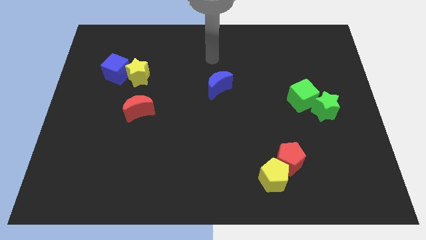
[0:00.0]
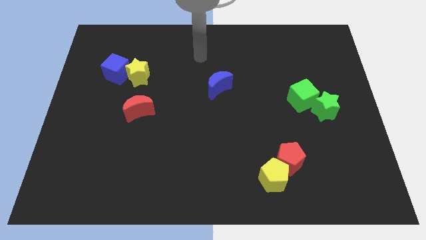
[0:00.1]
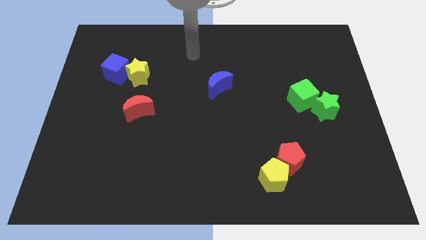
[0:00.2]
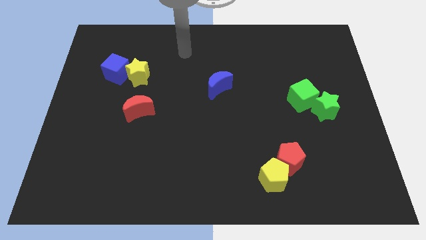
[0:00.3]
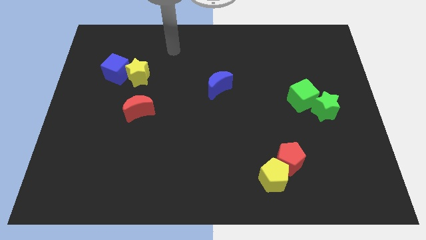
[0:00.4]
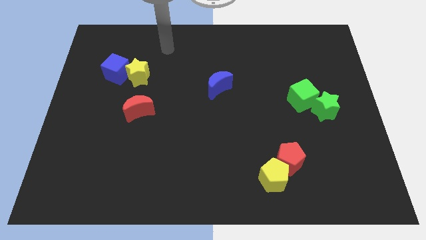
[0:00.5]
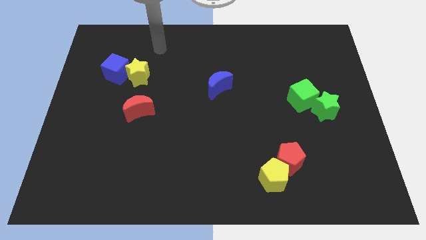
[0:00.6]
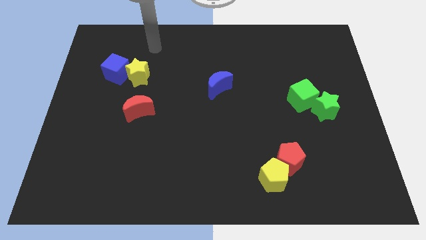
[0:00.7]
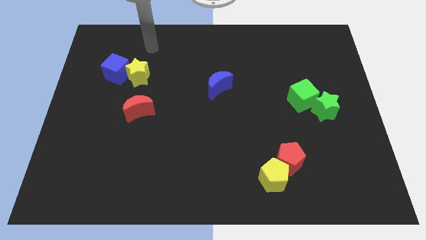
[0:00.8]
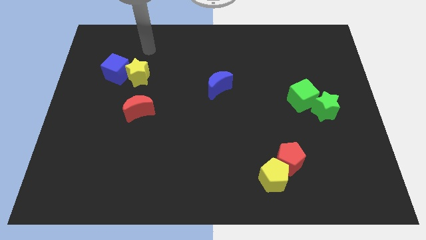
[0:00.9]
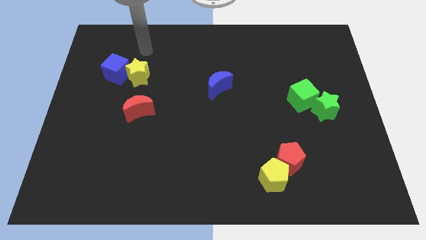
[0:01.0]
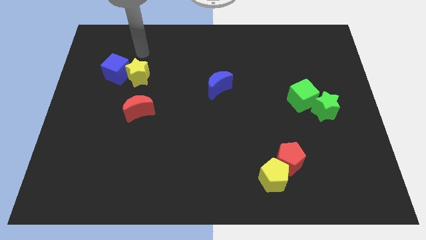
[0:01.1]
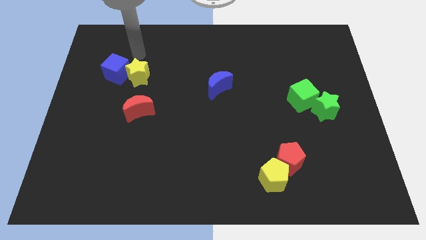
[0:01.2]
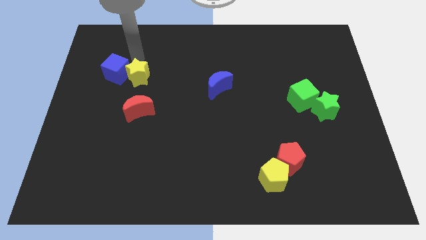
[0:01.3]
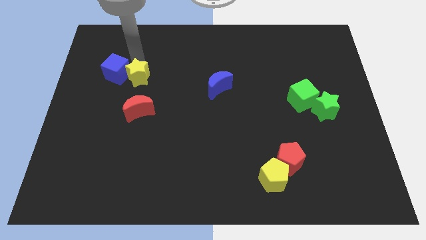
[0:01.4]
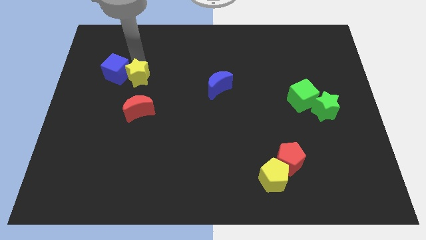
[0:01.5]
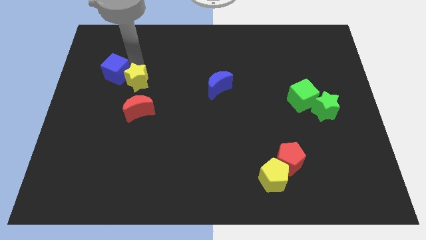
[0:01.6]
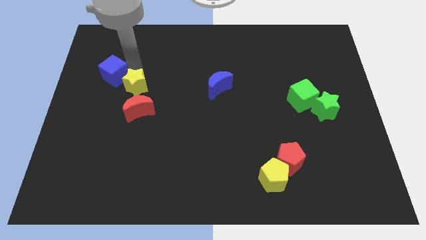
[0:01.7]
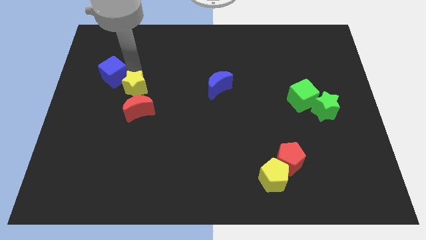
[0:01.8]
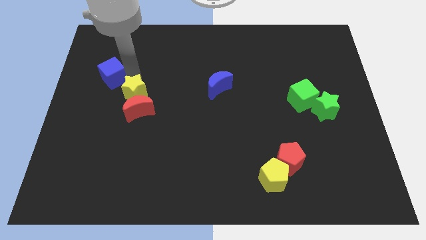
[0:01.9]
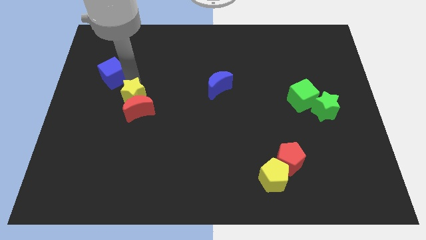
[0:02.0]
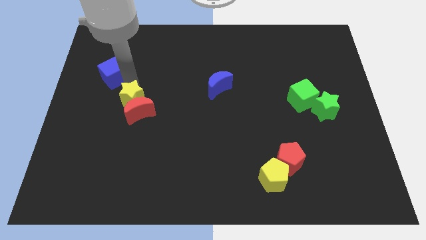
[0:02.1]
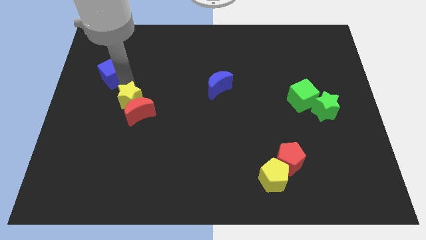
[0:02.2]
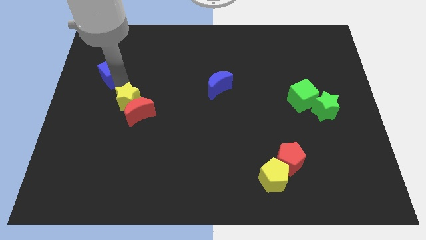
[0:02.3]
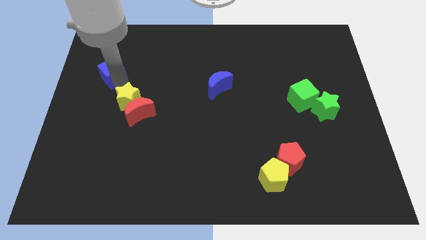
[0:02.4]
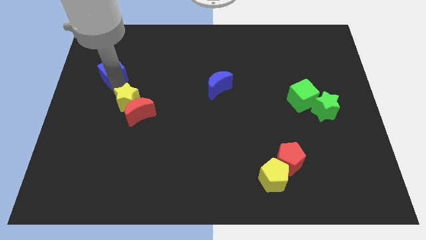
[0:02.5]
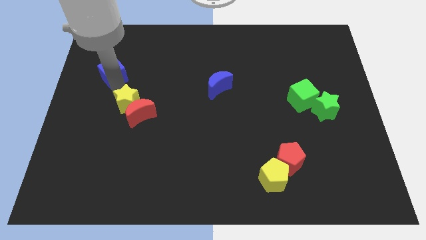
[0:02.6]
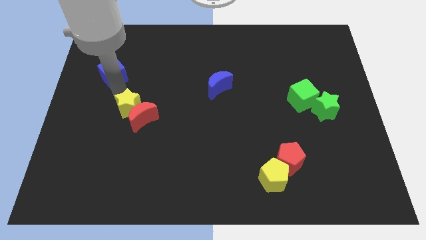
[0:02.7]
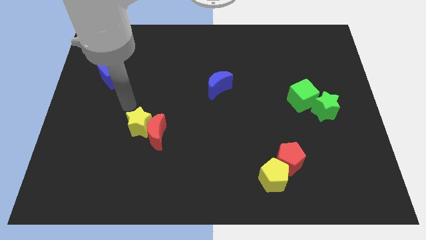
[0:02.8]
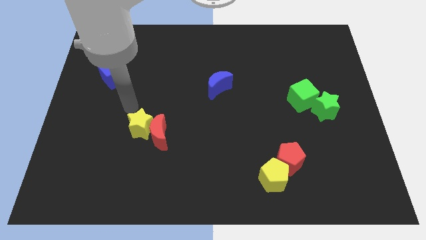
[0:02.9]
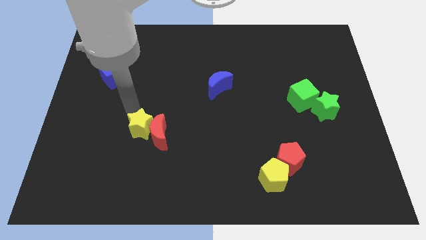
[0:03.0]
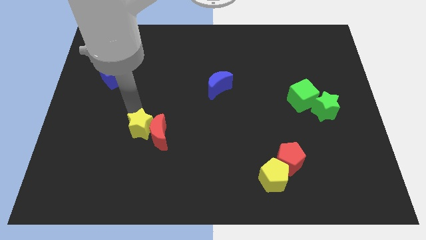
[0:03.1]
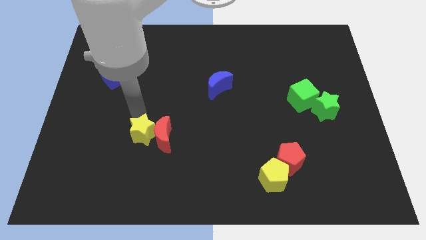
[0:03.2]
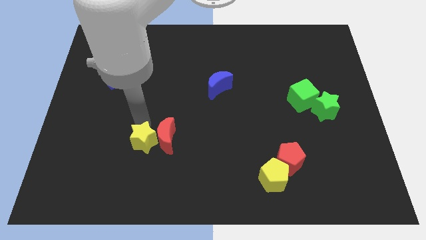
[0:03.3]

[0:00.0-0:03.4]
place the yellow star to the left side of the red moon

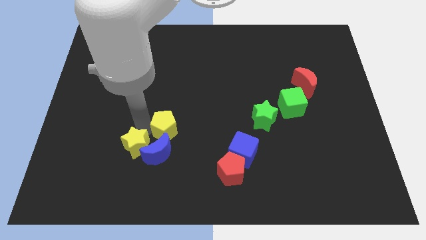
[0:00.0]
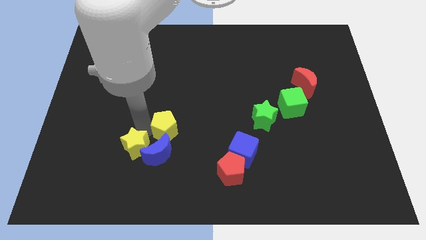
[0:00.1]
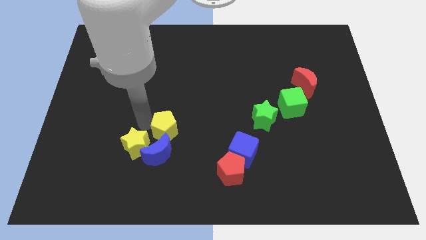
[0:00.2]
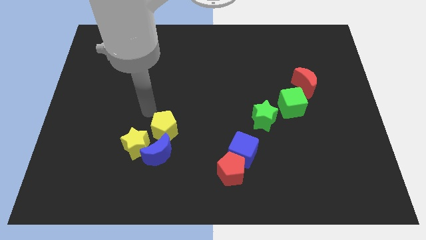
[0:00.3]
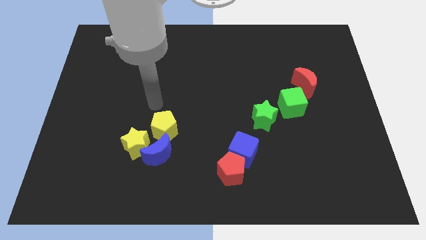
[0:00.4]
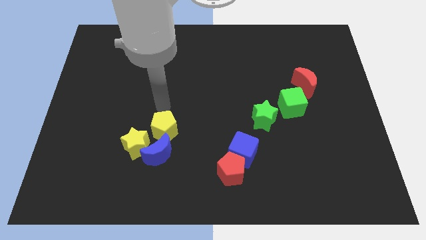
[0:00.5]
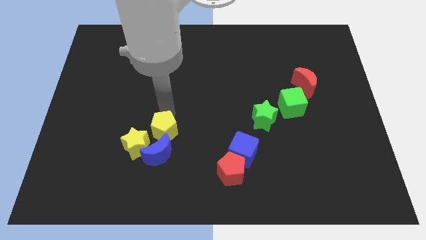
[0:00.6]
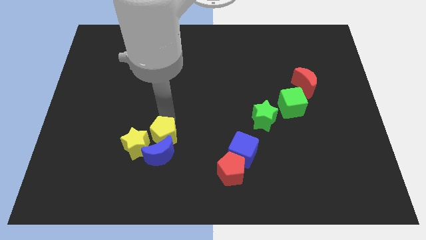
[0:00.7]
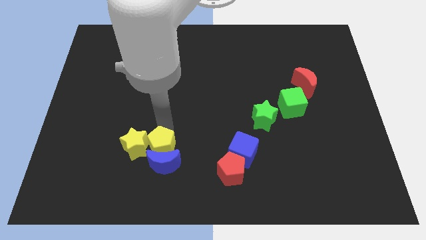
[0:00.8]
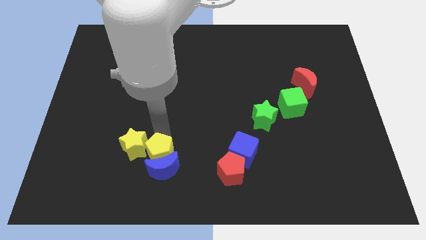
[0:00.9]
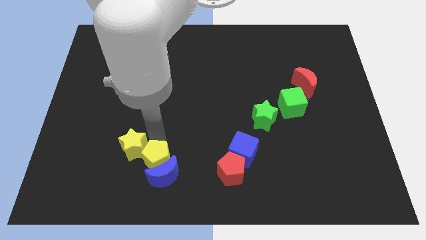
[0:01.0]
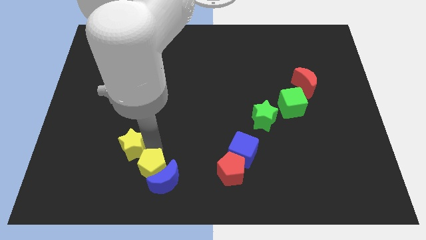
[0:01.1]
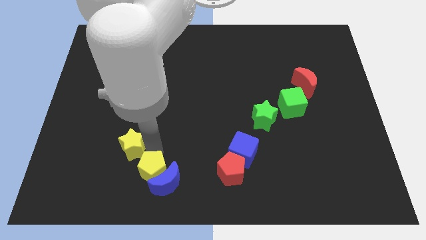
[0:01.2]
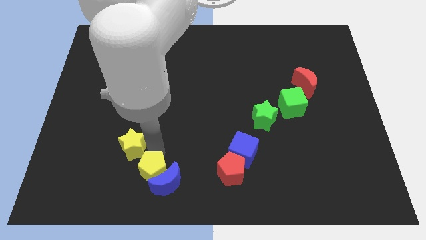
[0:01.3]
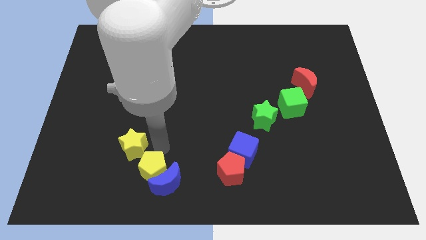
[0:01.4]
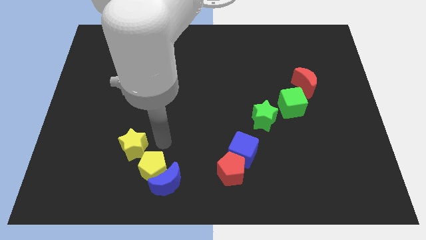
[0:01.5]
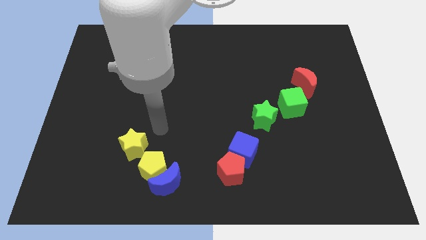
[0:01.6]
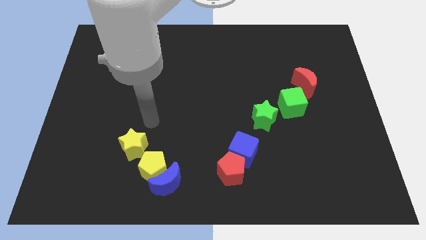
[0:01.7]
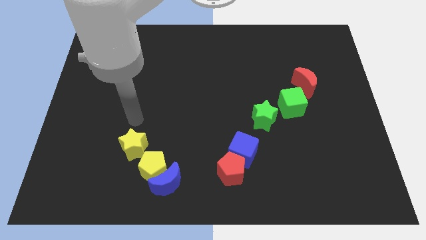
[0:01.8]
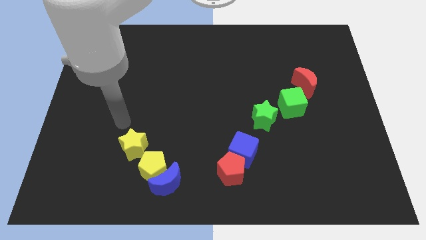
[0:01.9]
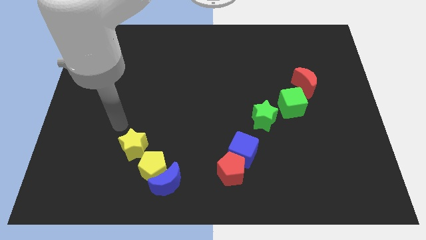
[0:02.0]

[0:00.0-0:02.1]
push the yellow pentagon into the blue crescent

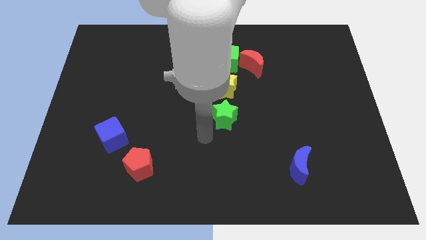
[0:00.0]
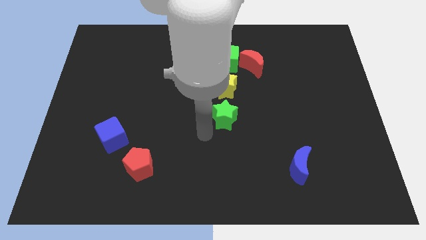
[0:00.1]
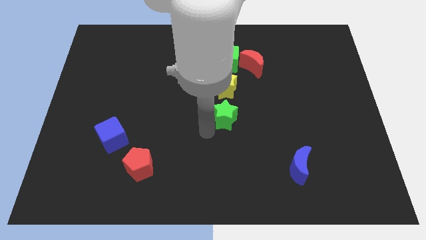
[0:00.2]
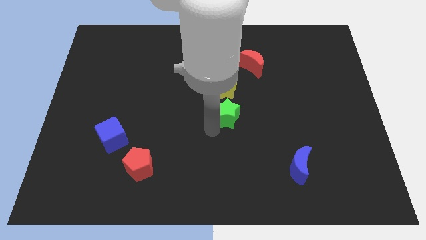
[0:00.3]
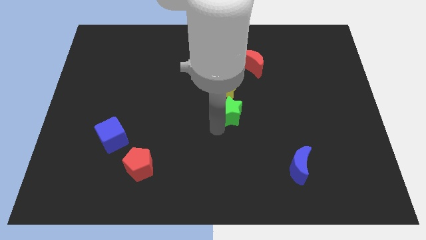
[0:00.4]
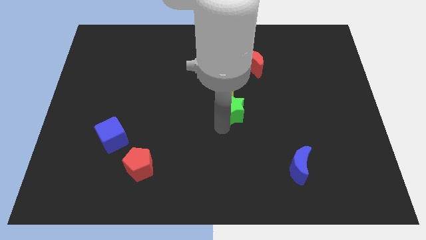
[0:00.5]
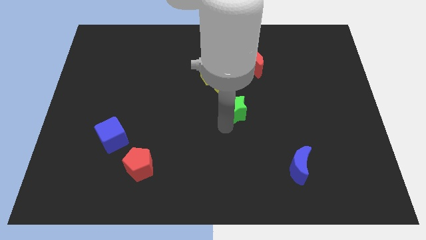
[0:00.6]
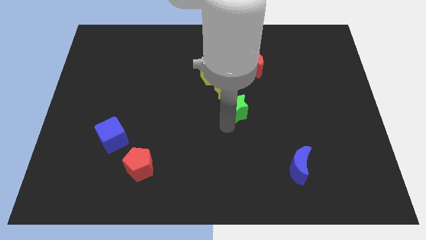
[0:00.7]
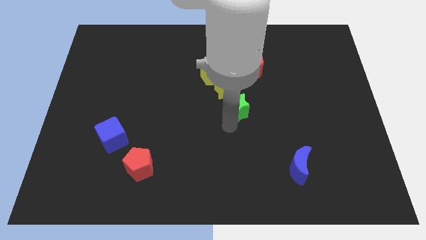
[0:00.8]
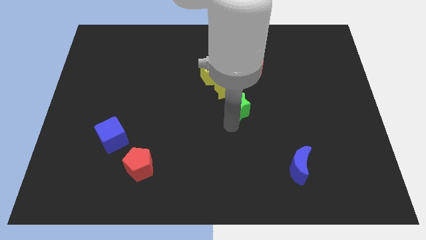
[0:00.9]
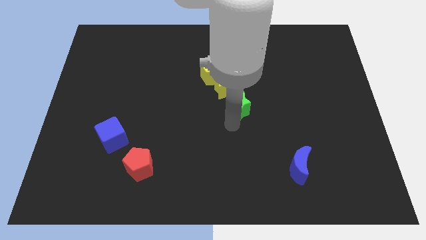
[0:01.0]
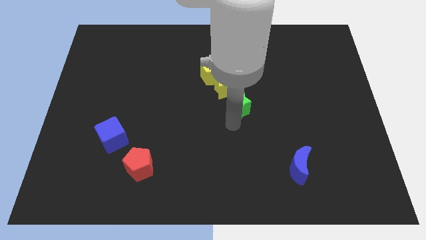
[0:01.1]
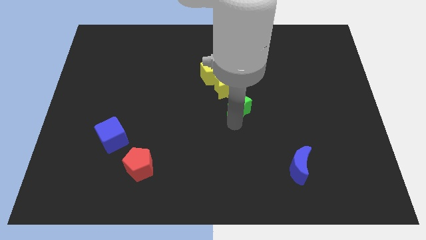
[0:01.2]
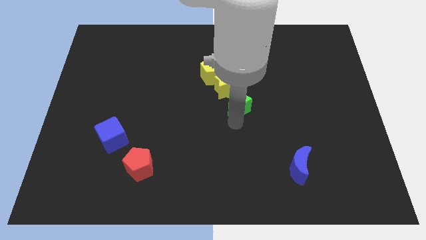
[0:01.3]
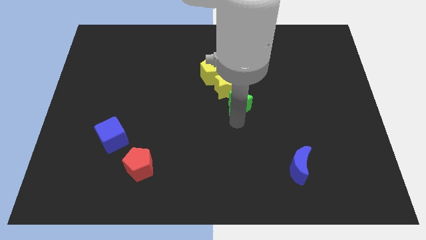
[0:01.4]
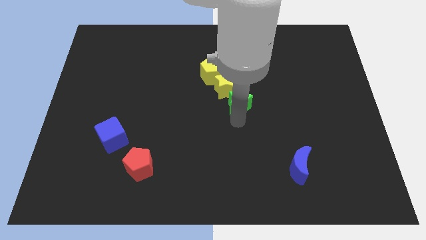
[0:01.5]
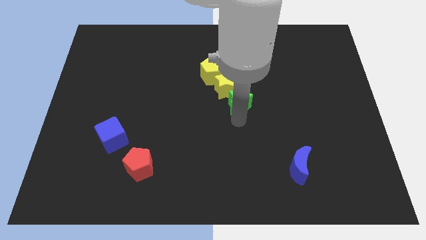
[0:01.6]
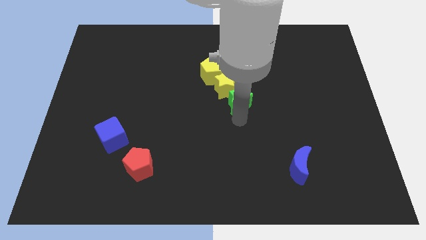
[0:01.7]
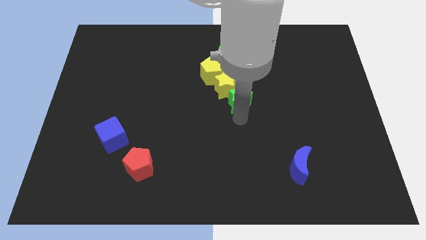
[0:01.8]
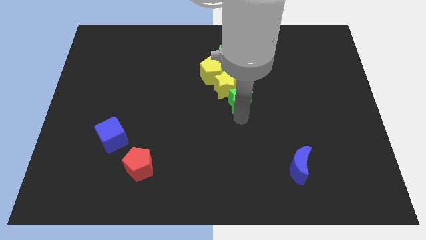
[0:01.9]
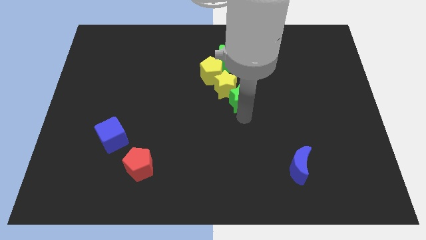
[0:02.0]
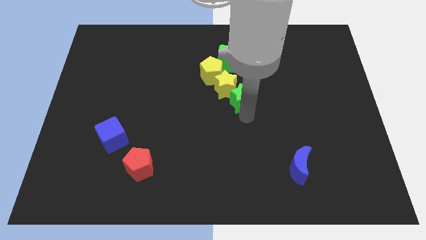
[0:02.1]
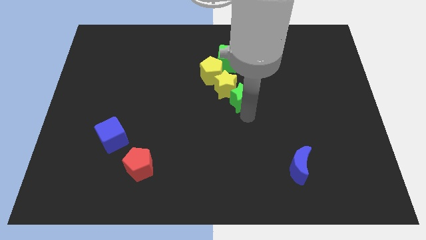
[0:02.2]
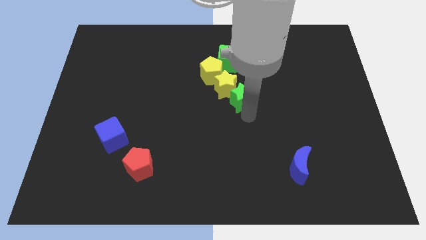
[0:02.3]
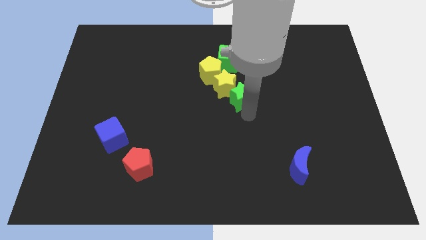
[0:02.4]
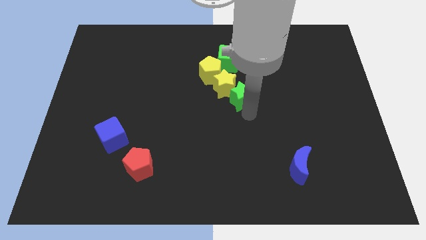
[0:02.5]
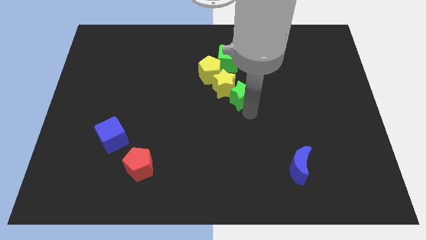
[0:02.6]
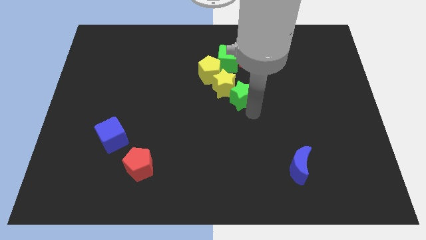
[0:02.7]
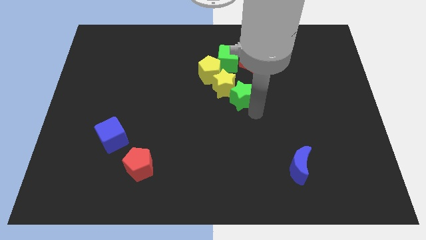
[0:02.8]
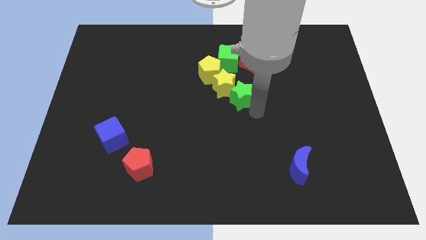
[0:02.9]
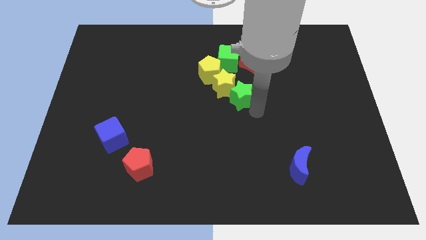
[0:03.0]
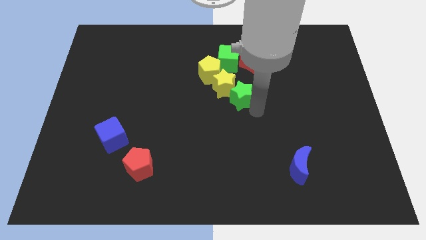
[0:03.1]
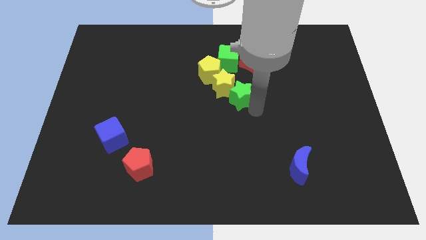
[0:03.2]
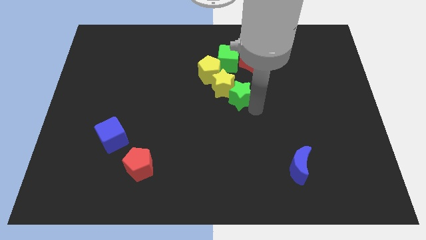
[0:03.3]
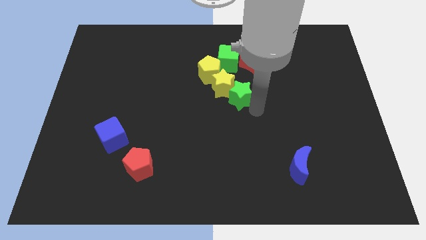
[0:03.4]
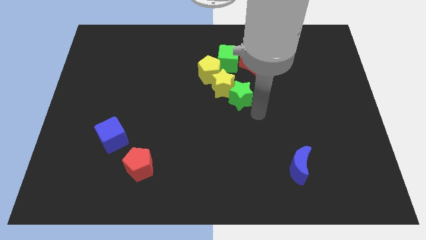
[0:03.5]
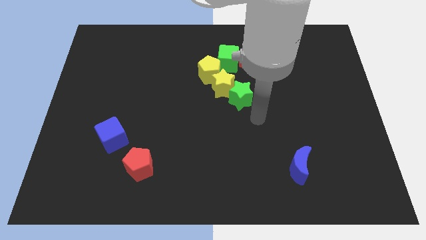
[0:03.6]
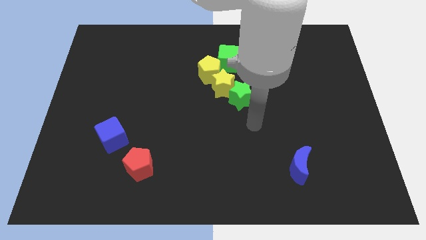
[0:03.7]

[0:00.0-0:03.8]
move the green star into the bottom right of the yellow star
